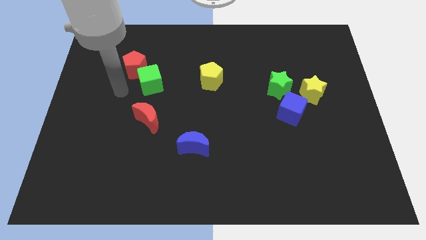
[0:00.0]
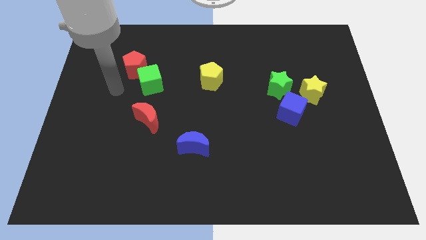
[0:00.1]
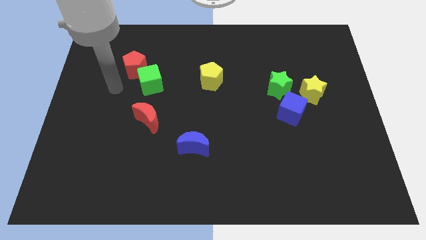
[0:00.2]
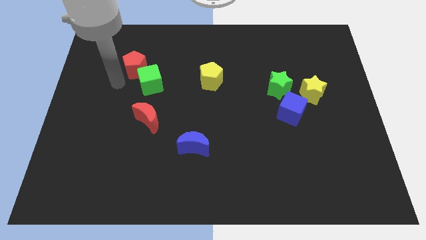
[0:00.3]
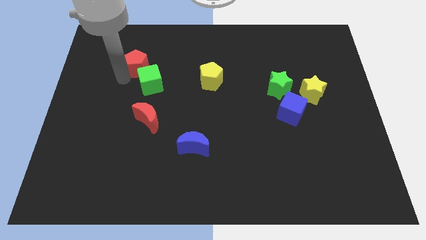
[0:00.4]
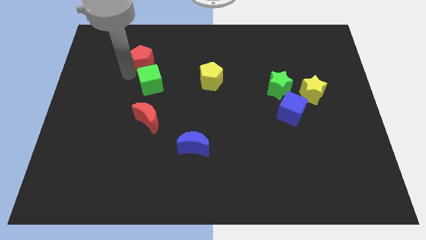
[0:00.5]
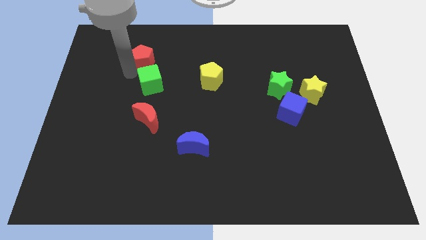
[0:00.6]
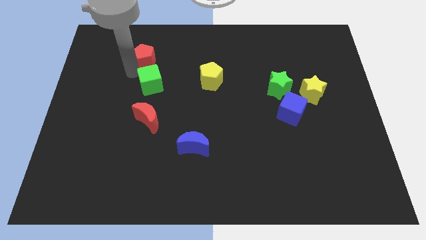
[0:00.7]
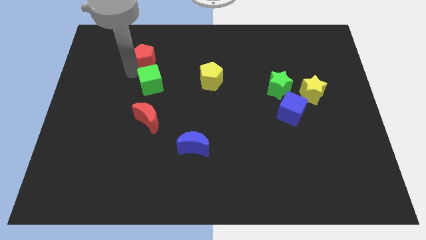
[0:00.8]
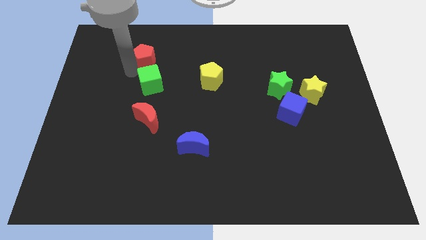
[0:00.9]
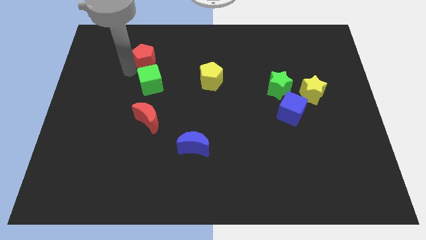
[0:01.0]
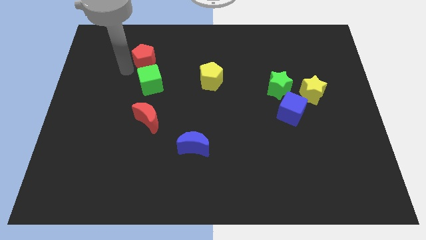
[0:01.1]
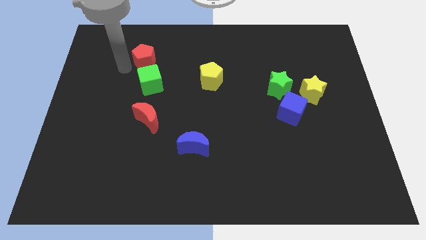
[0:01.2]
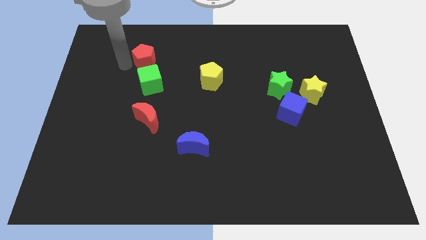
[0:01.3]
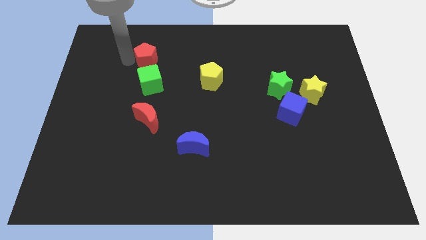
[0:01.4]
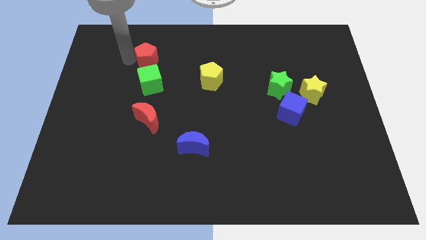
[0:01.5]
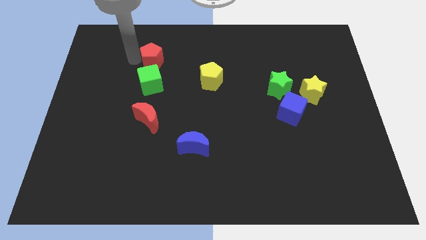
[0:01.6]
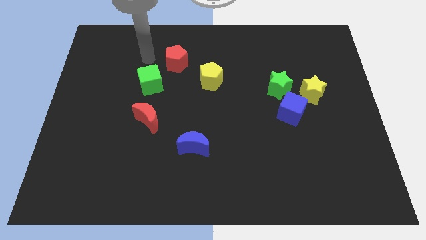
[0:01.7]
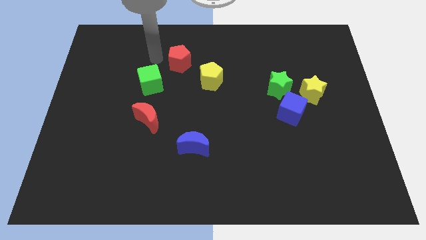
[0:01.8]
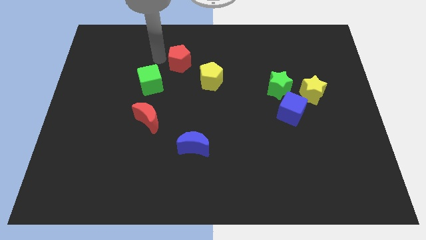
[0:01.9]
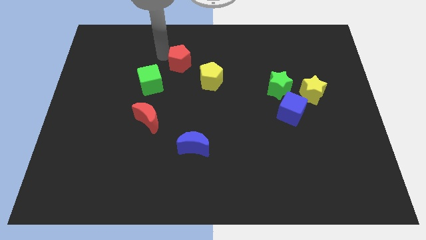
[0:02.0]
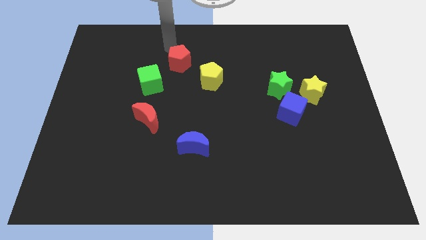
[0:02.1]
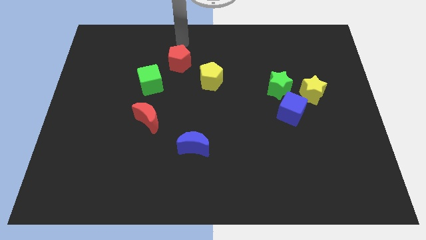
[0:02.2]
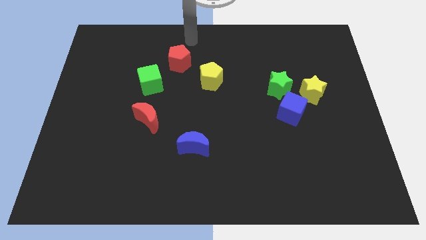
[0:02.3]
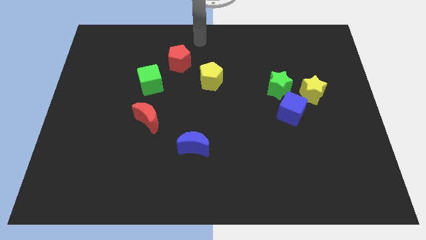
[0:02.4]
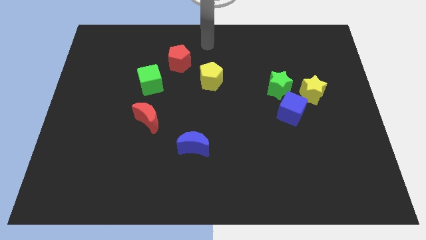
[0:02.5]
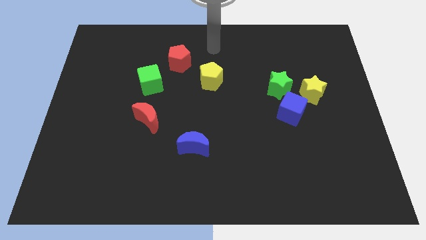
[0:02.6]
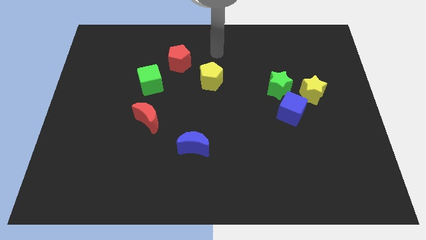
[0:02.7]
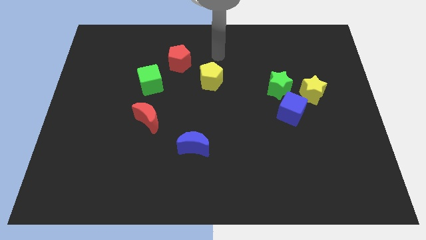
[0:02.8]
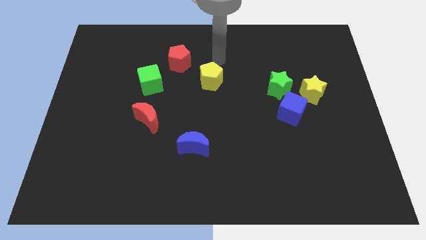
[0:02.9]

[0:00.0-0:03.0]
separate the red pentagon from the green cube

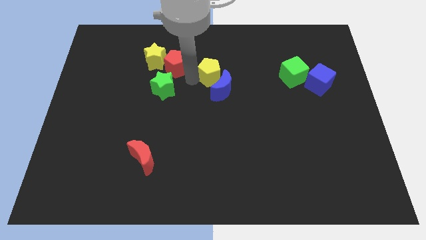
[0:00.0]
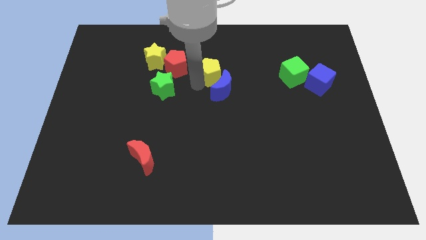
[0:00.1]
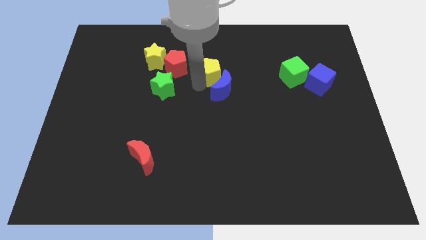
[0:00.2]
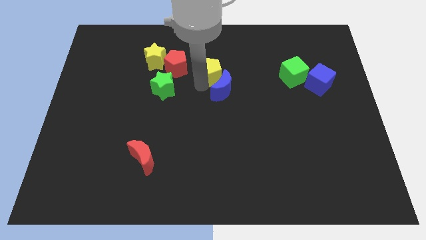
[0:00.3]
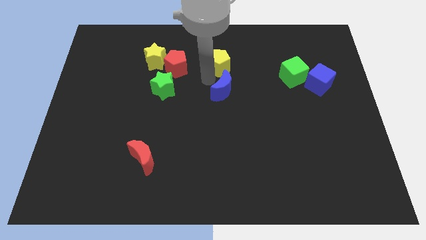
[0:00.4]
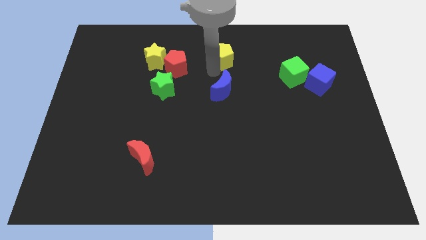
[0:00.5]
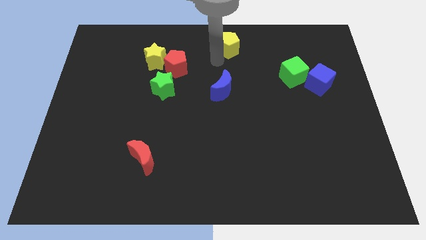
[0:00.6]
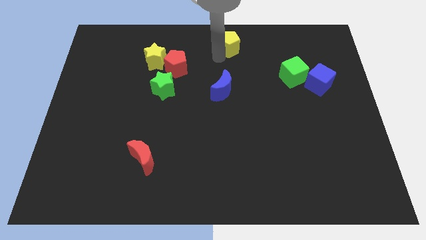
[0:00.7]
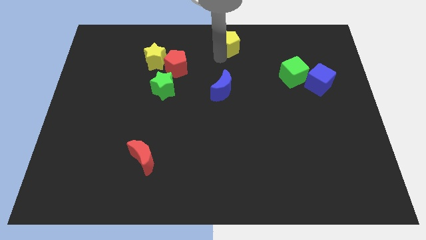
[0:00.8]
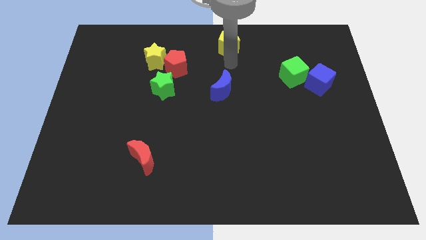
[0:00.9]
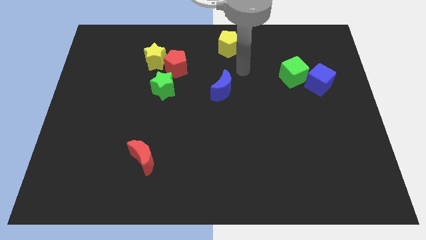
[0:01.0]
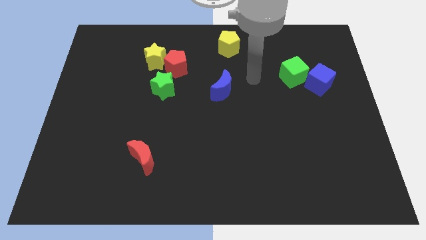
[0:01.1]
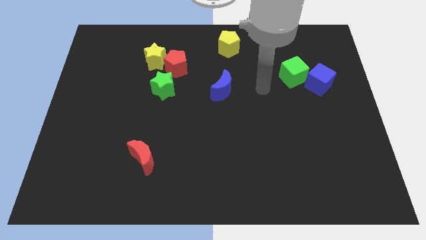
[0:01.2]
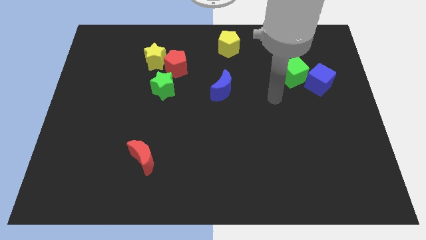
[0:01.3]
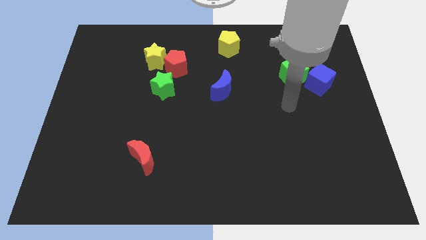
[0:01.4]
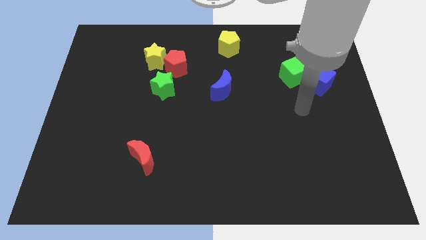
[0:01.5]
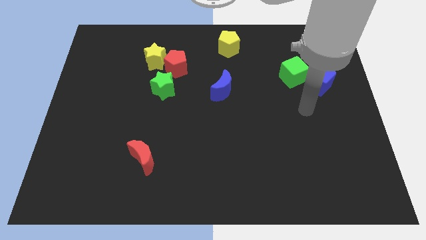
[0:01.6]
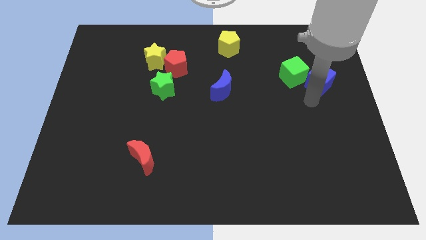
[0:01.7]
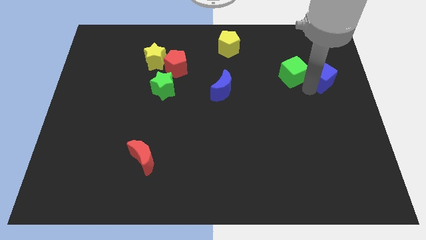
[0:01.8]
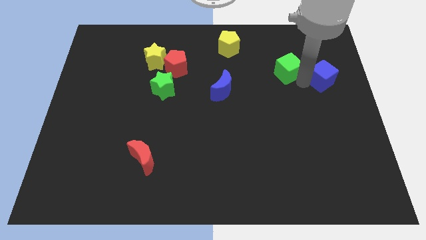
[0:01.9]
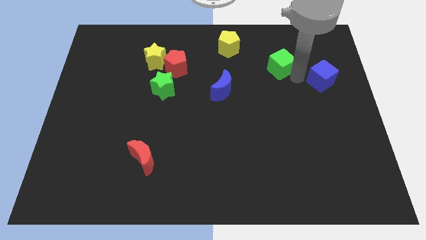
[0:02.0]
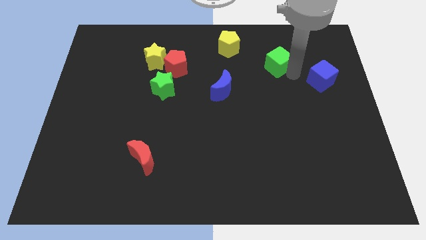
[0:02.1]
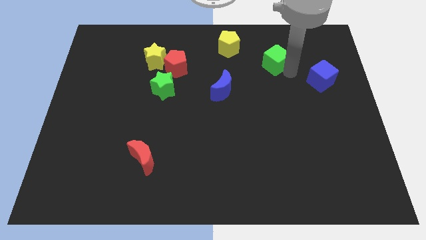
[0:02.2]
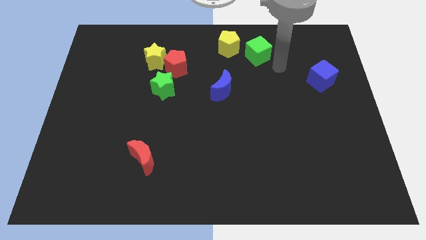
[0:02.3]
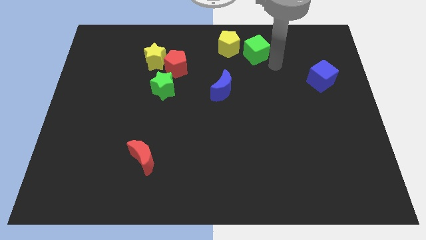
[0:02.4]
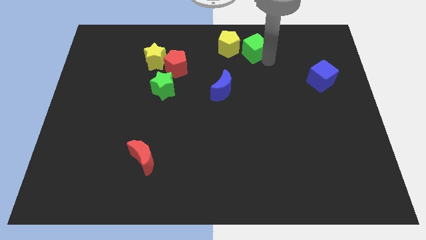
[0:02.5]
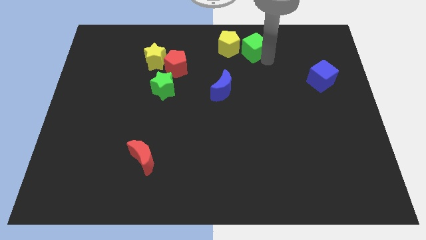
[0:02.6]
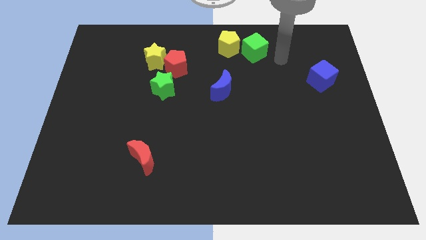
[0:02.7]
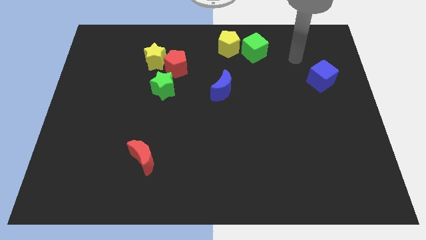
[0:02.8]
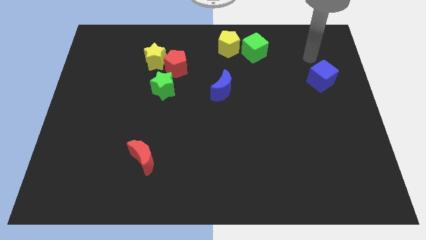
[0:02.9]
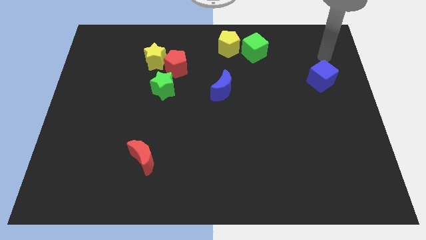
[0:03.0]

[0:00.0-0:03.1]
move the yellow pentagon and the green cube to the top center of the board

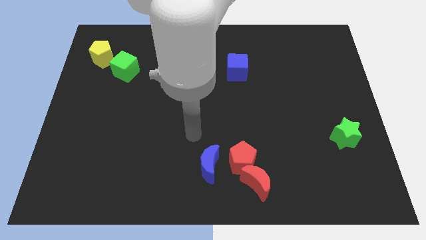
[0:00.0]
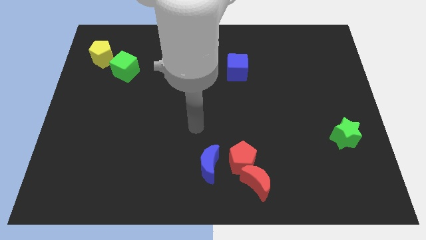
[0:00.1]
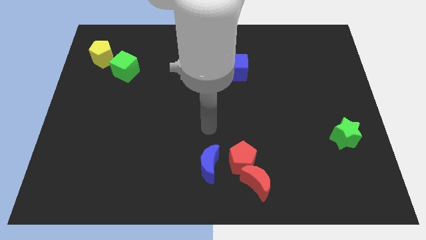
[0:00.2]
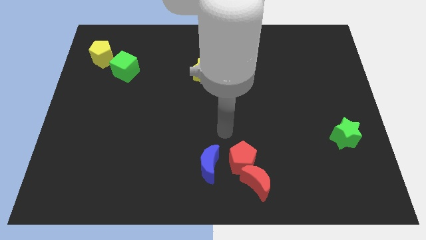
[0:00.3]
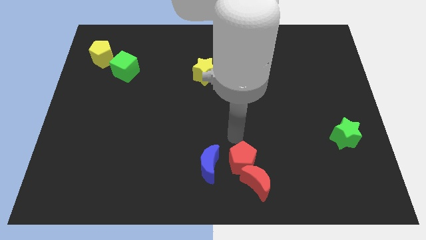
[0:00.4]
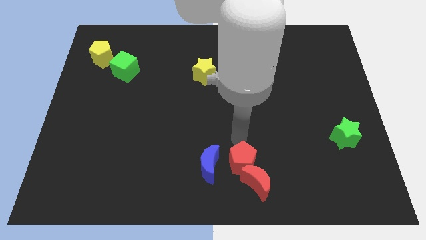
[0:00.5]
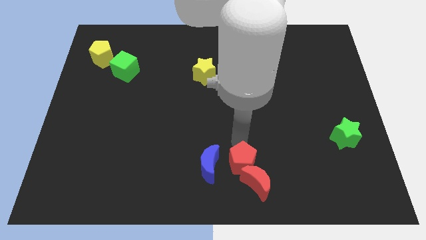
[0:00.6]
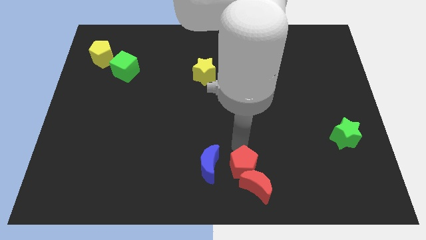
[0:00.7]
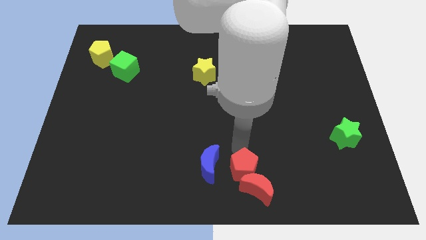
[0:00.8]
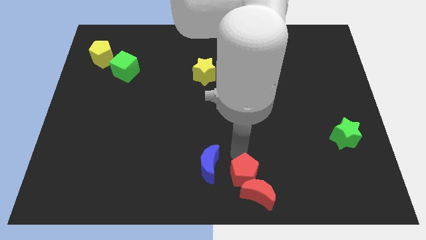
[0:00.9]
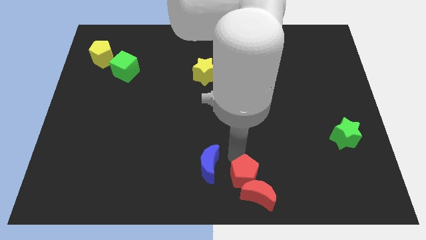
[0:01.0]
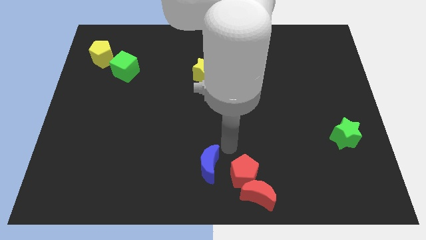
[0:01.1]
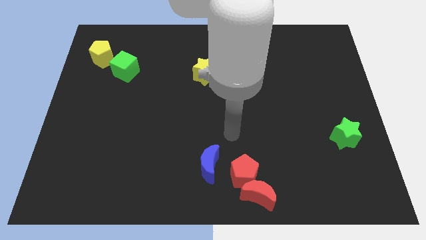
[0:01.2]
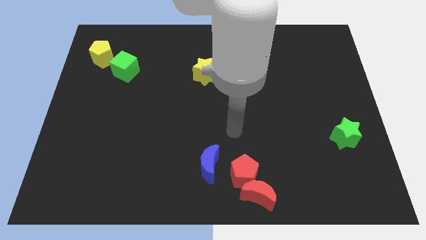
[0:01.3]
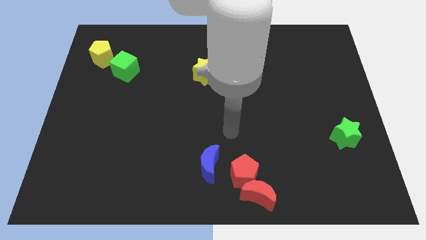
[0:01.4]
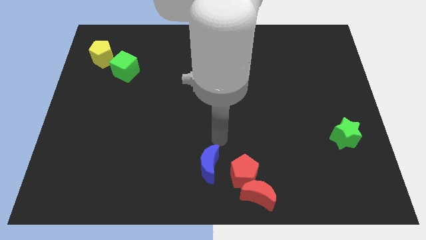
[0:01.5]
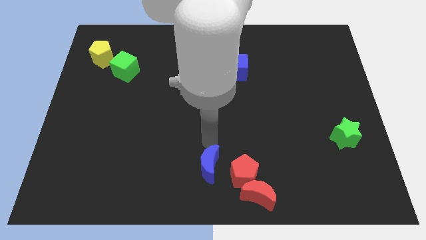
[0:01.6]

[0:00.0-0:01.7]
push red pentagon towards the bottom of the table

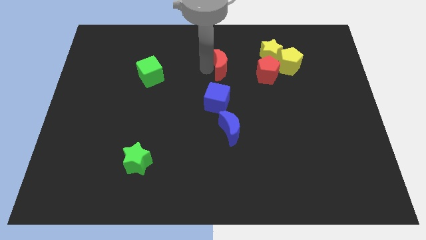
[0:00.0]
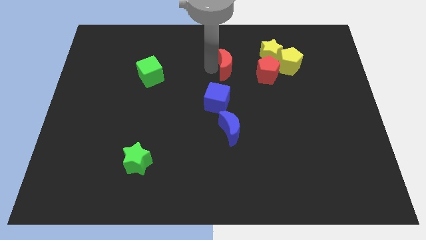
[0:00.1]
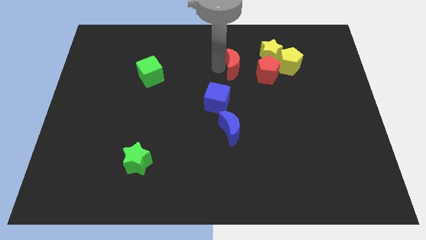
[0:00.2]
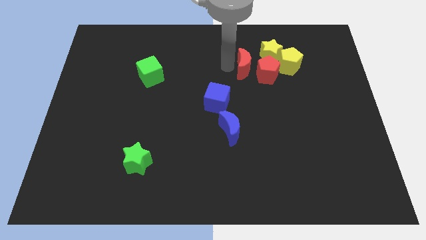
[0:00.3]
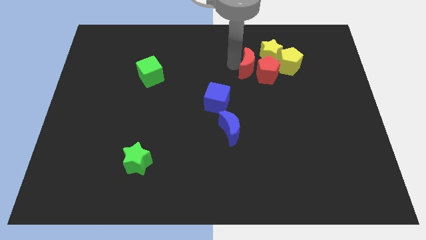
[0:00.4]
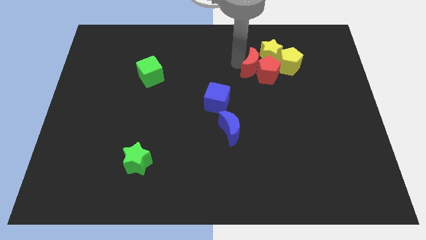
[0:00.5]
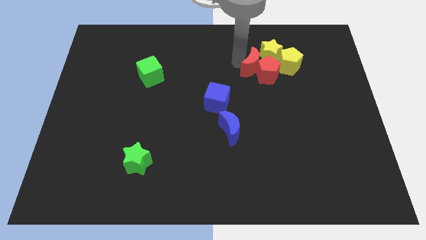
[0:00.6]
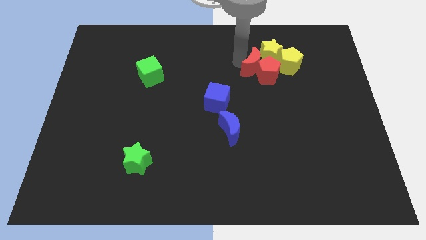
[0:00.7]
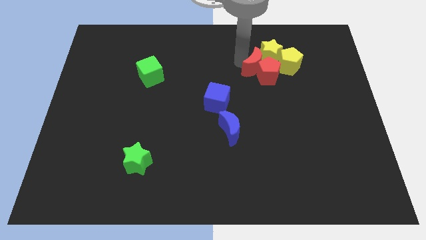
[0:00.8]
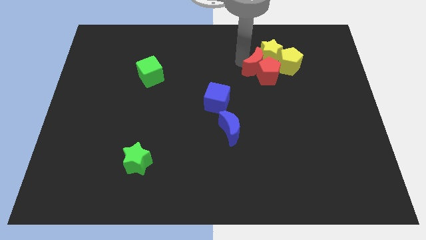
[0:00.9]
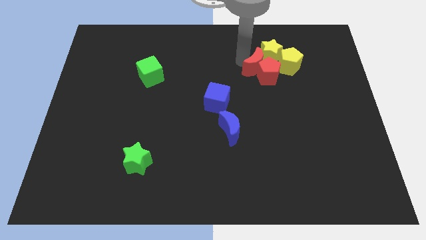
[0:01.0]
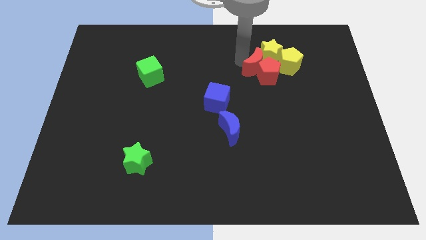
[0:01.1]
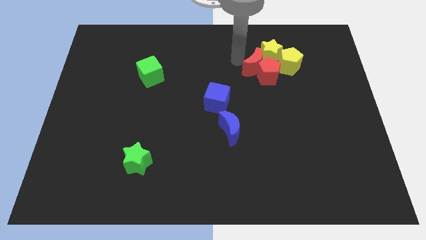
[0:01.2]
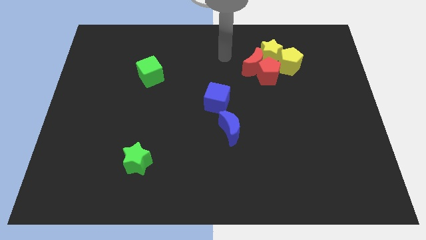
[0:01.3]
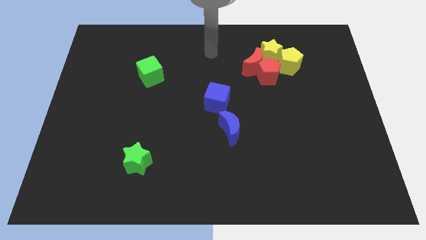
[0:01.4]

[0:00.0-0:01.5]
move the red moon to the top left of the red pentagon
